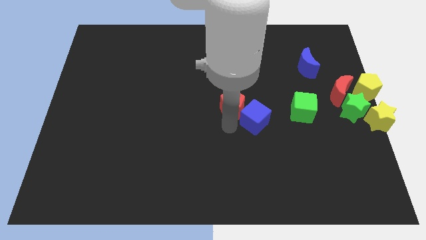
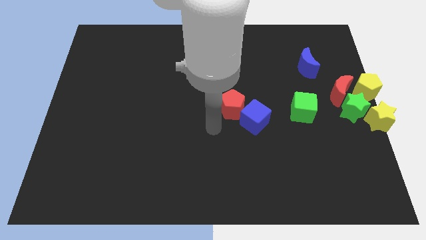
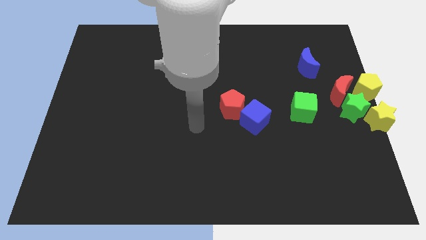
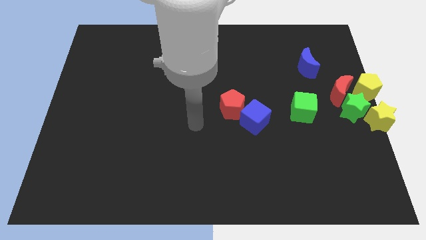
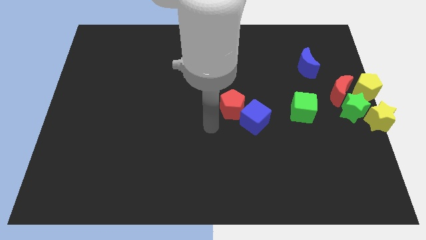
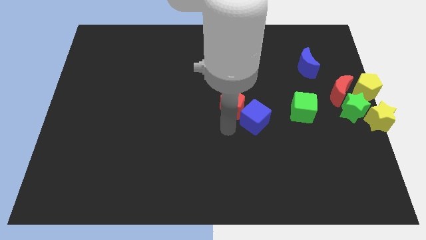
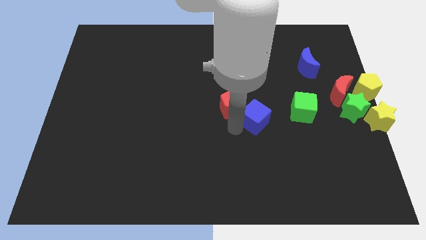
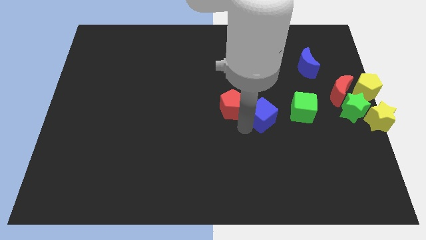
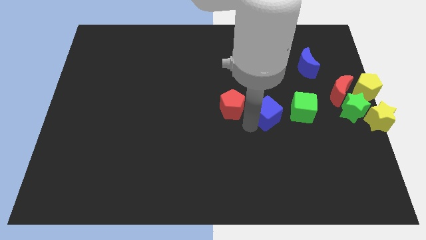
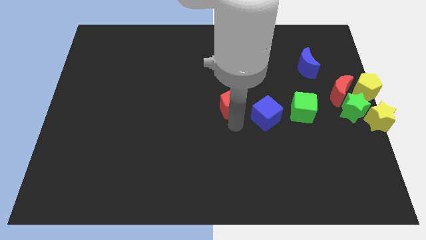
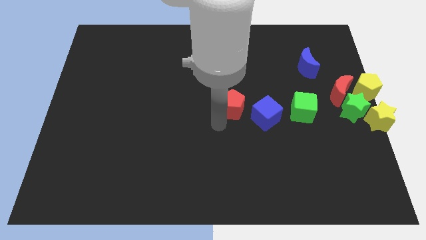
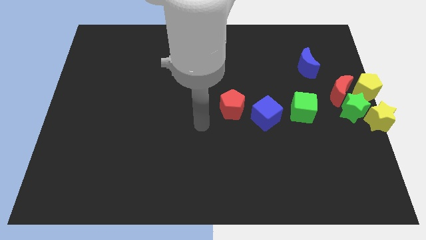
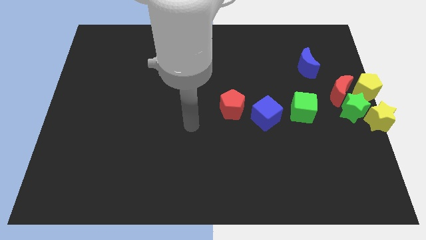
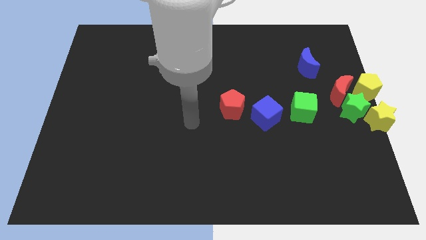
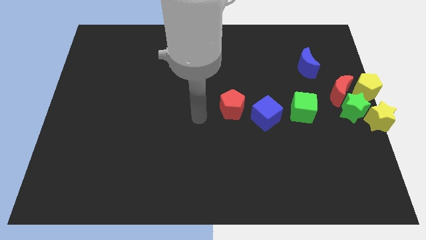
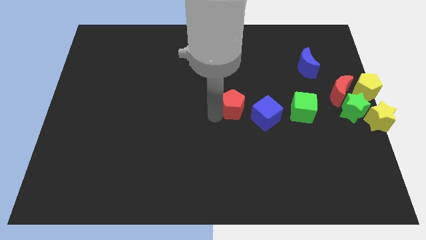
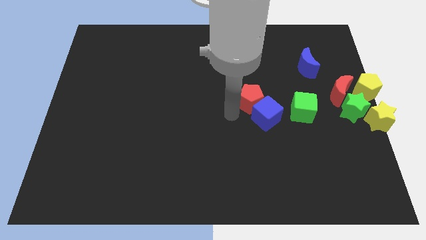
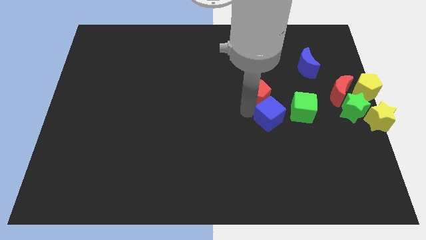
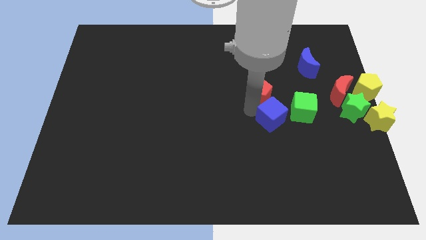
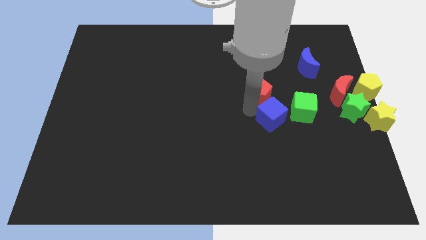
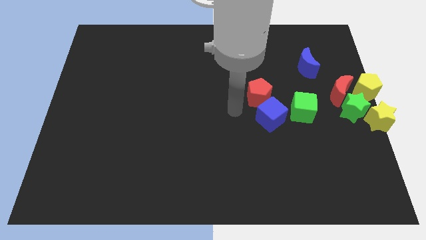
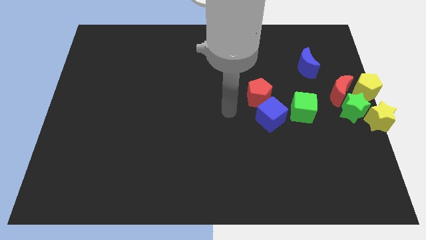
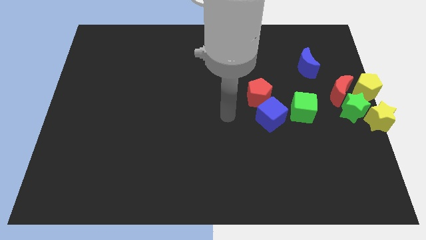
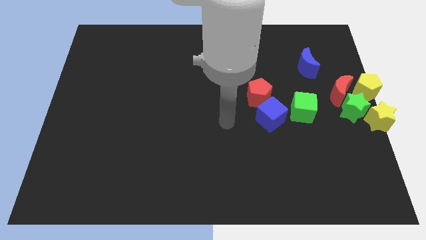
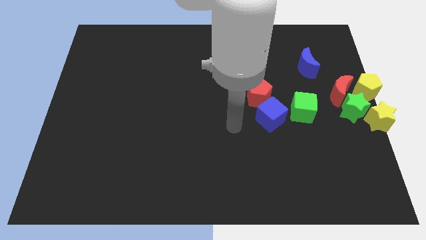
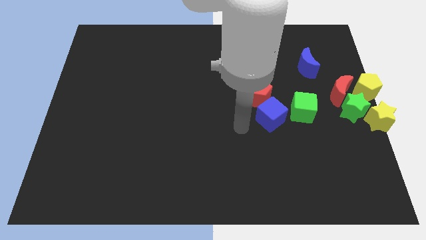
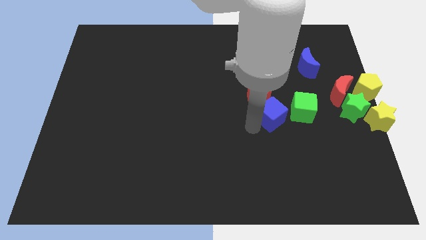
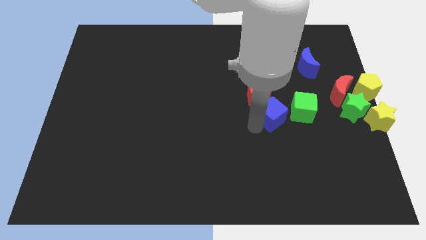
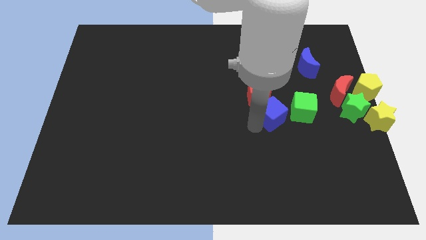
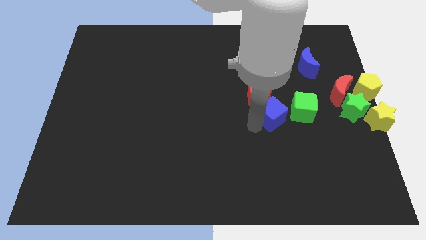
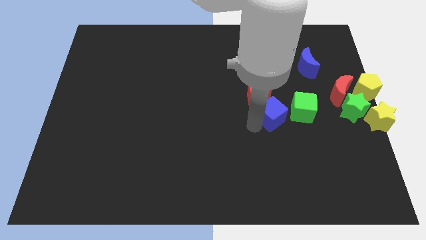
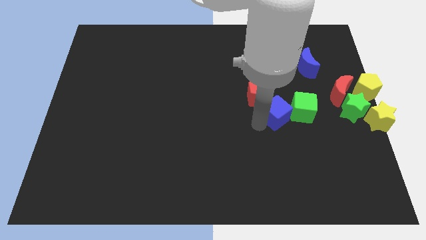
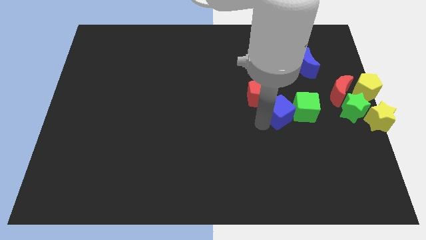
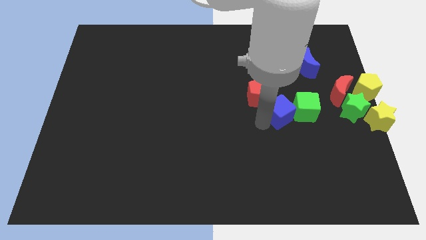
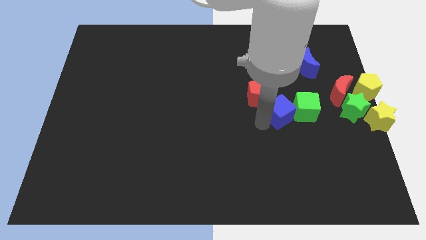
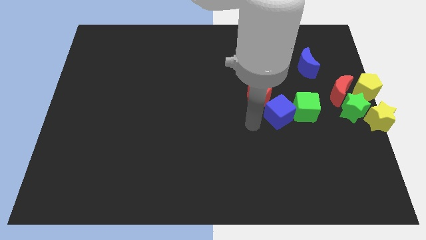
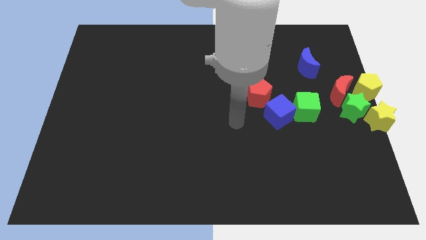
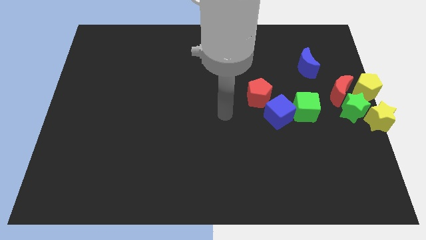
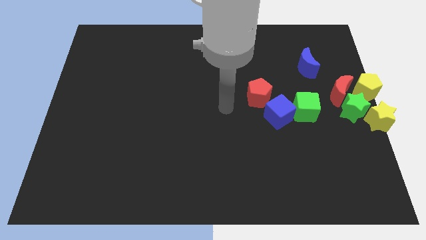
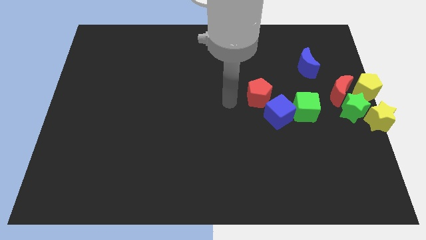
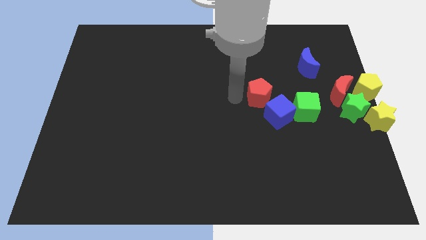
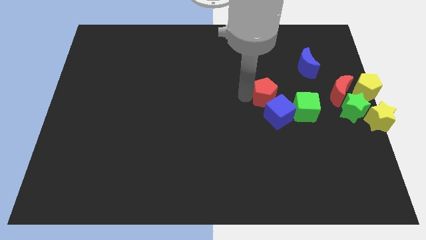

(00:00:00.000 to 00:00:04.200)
push the blue cube into the green cube

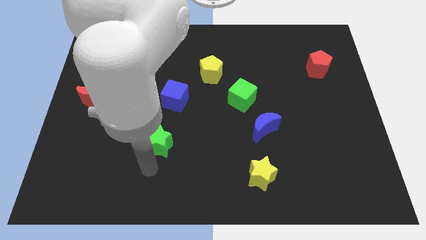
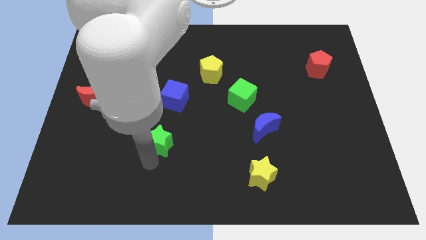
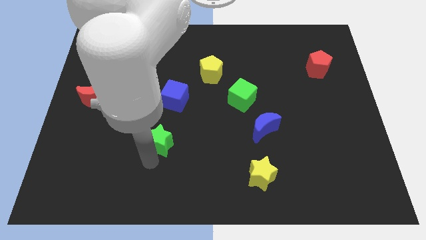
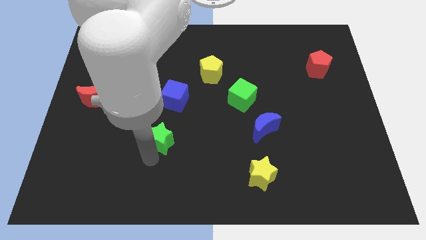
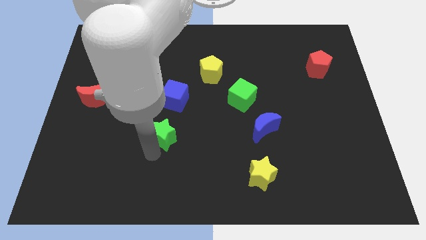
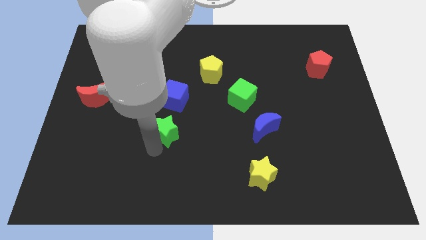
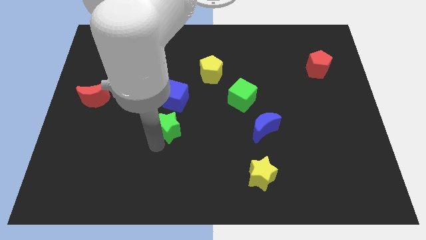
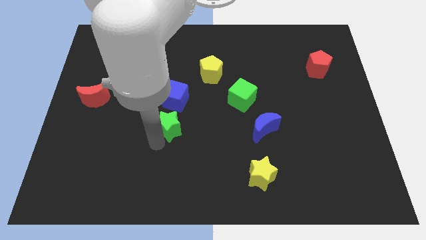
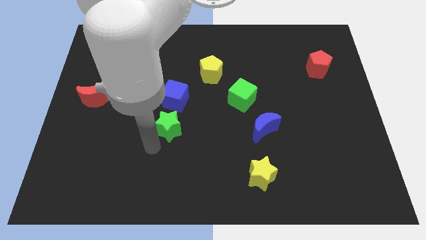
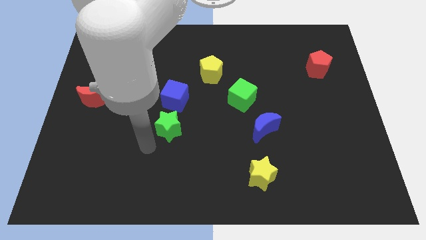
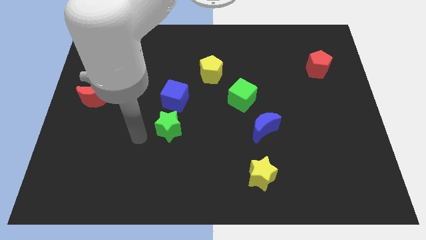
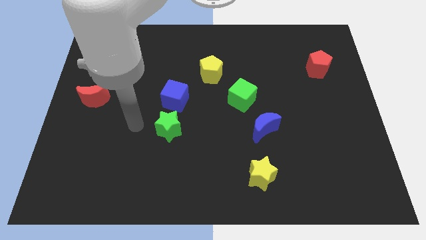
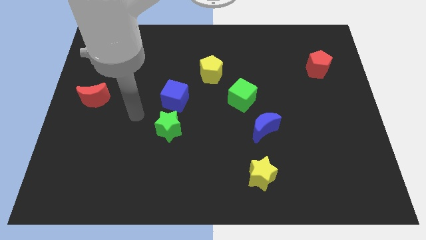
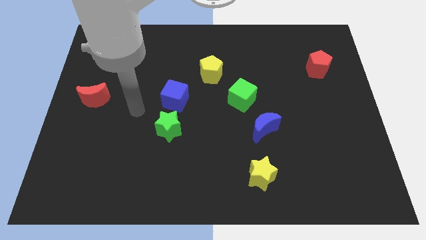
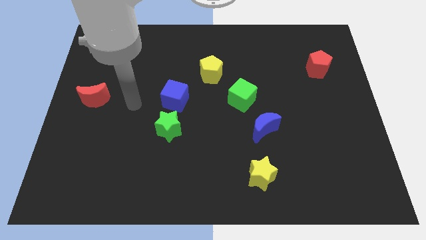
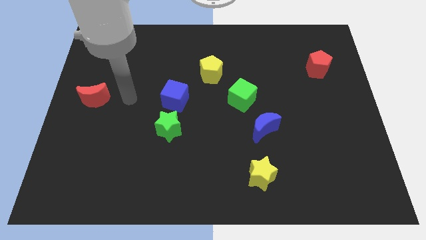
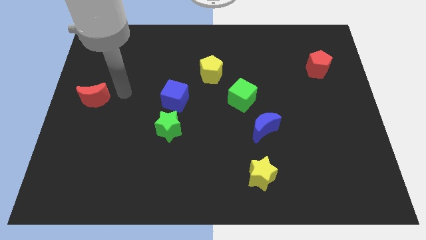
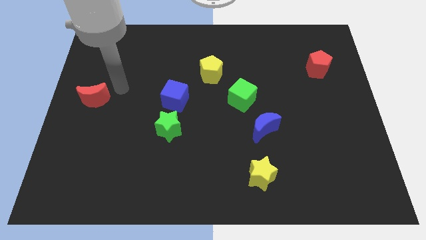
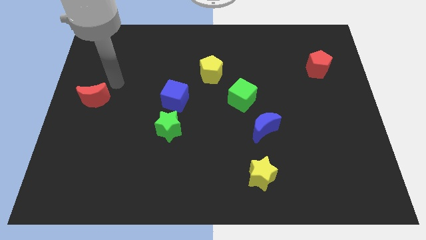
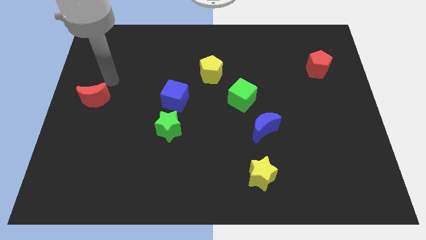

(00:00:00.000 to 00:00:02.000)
move the green star towards the blue cube

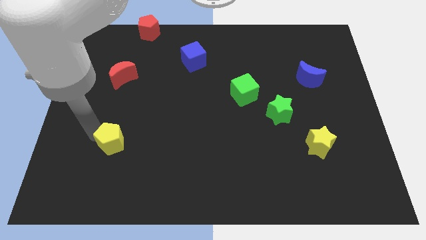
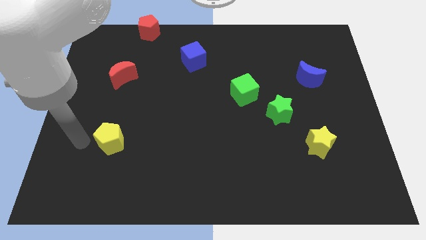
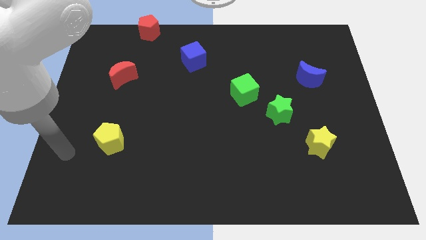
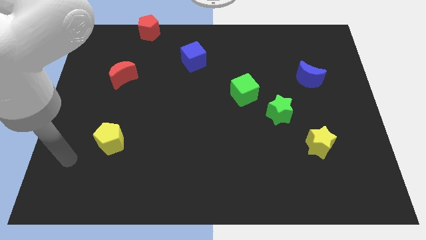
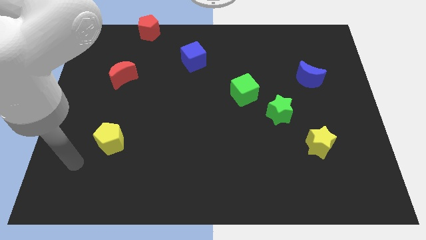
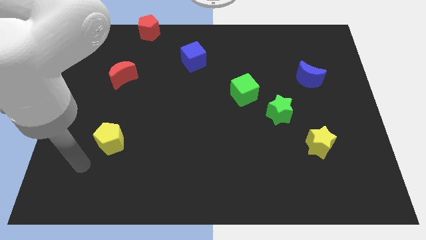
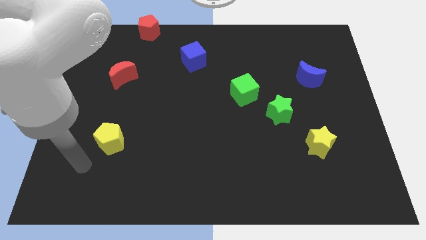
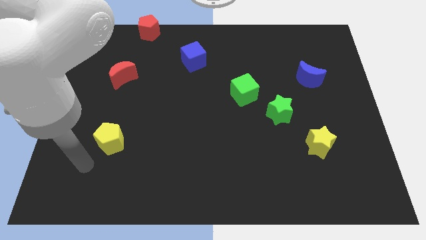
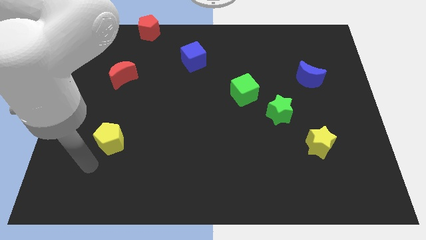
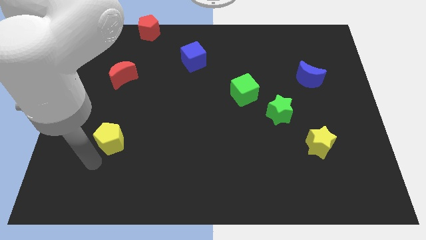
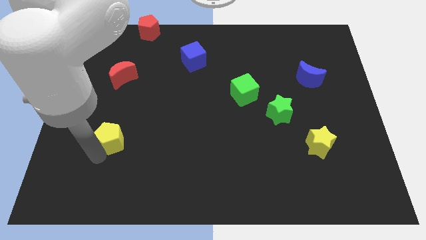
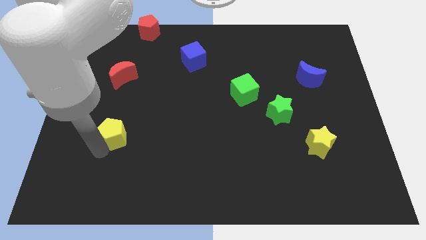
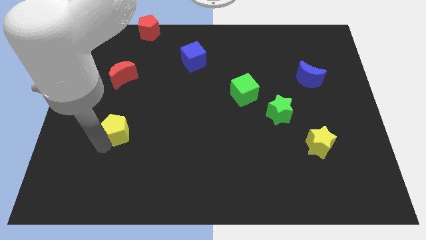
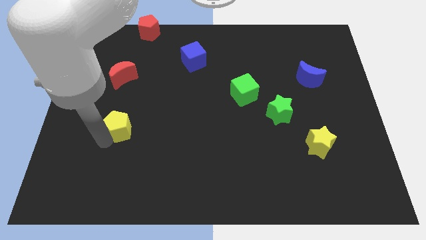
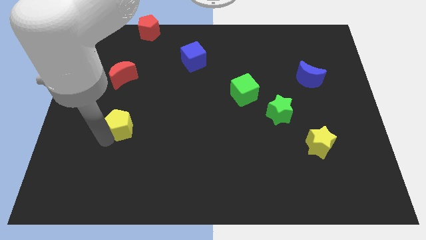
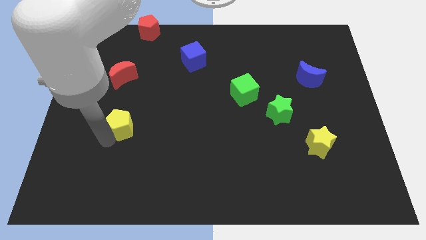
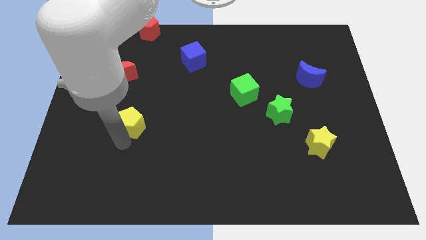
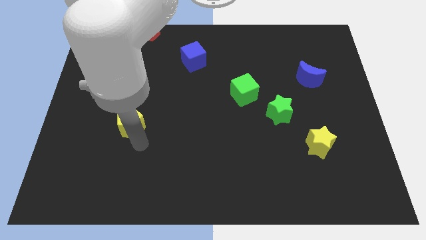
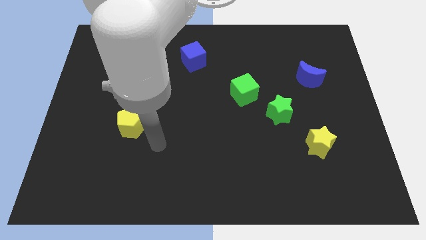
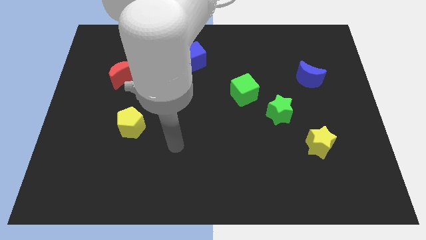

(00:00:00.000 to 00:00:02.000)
move yellow pentagon slightly to top side

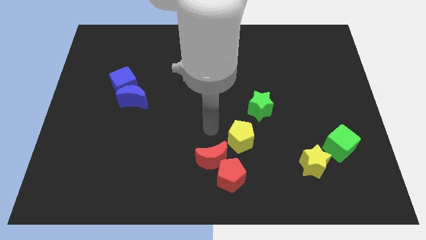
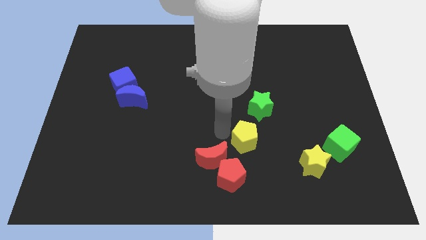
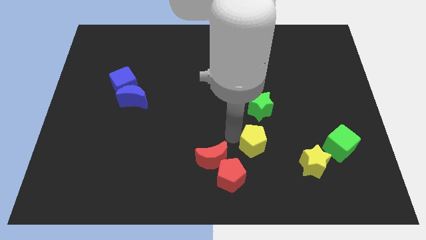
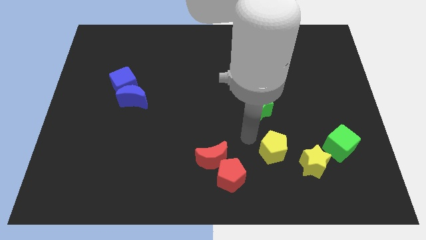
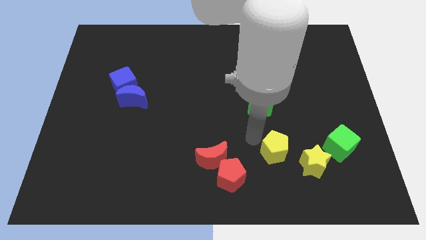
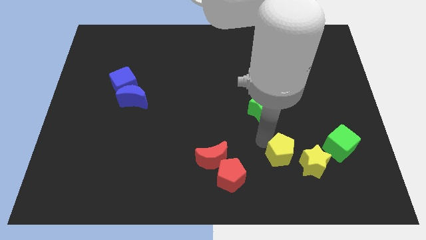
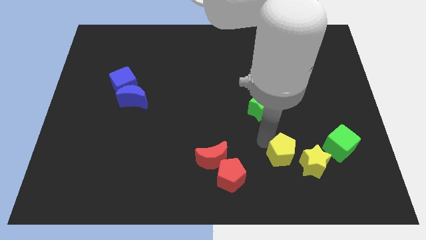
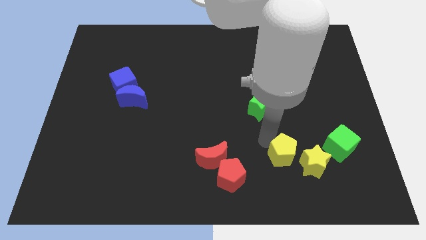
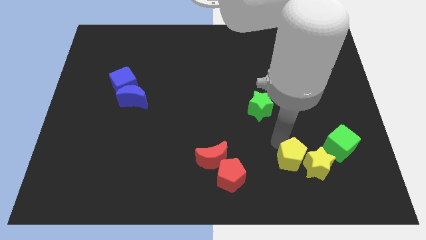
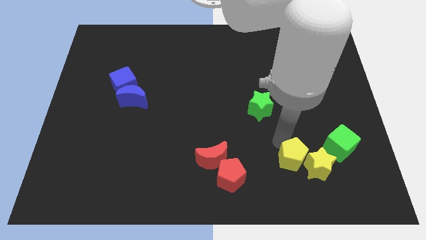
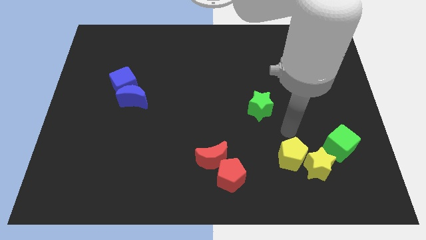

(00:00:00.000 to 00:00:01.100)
move yellow pentagon into the yellow star
